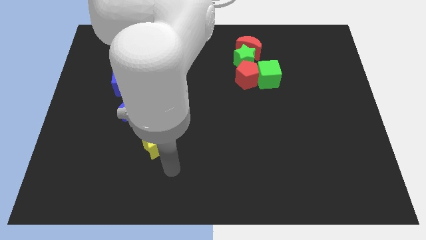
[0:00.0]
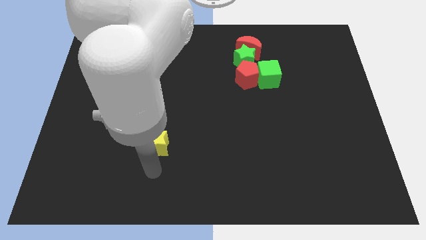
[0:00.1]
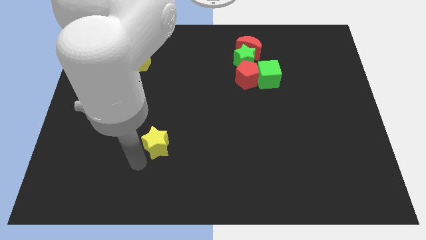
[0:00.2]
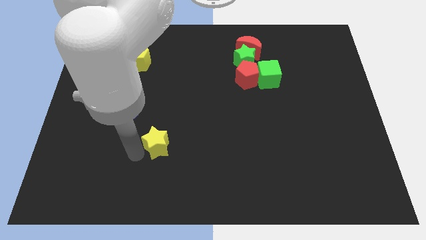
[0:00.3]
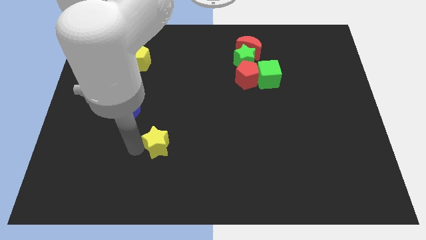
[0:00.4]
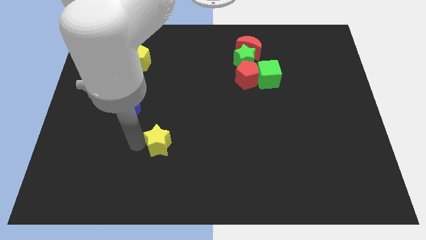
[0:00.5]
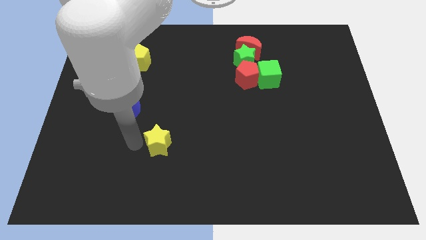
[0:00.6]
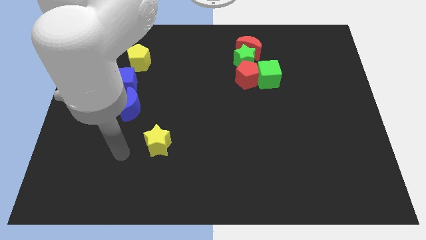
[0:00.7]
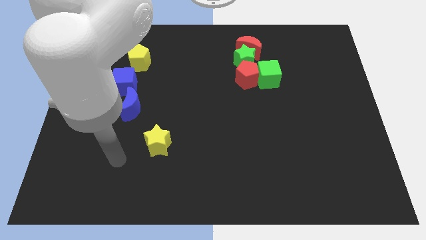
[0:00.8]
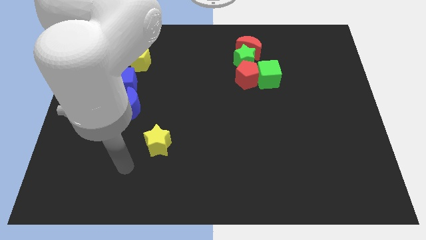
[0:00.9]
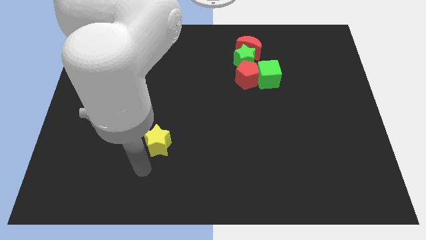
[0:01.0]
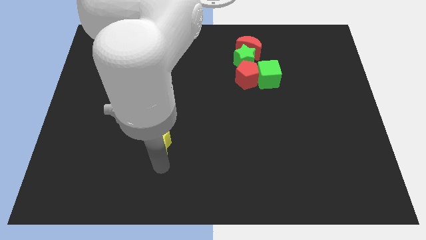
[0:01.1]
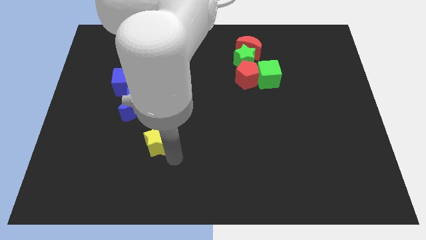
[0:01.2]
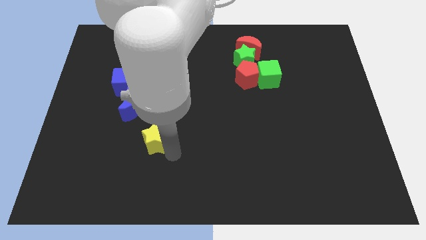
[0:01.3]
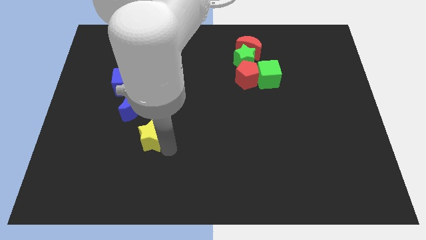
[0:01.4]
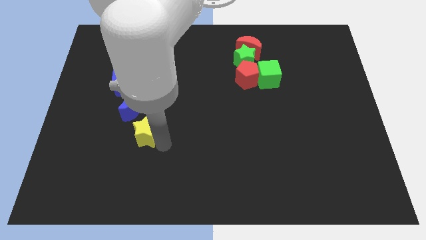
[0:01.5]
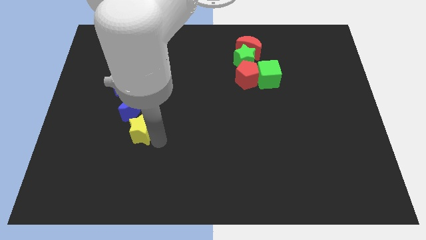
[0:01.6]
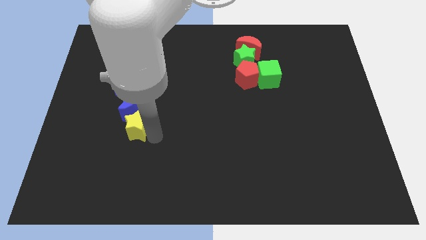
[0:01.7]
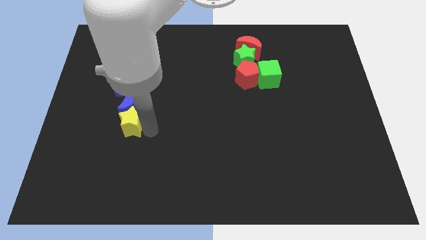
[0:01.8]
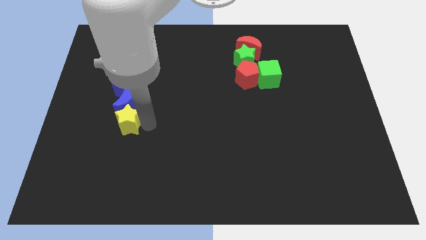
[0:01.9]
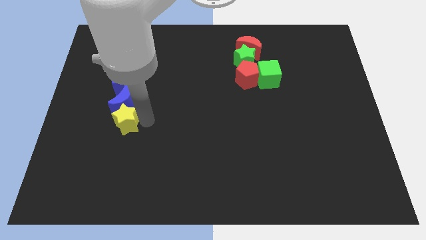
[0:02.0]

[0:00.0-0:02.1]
push yellow star into blue moon

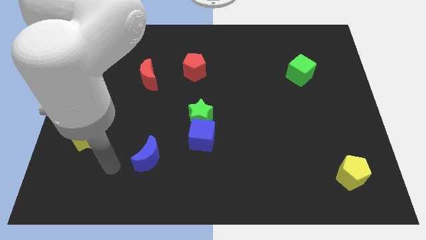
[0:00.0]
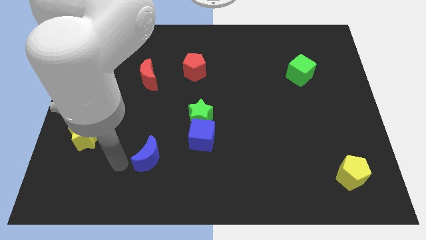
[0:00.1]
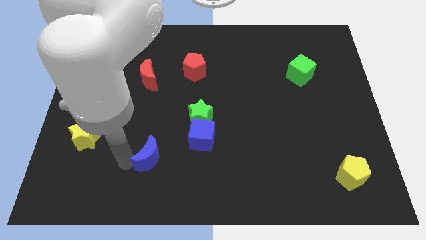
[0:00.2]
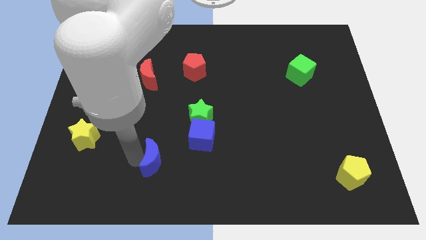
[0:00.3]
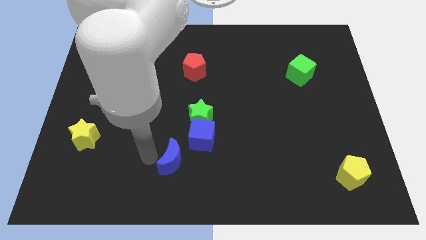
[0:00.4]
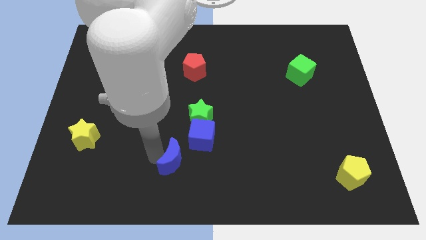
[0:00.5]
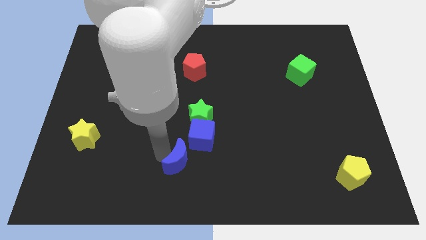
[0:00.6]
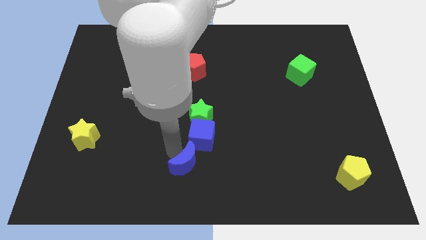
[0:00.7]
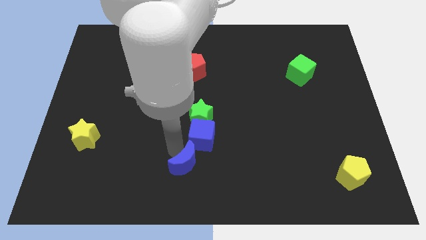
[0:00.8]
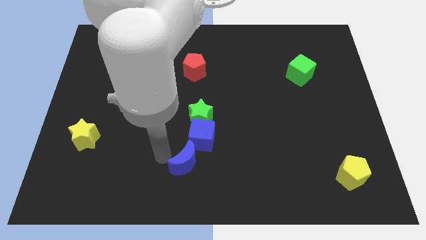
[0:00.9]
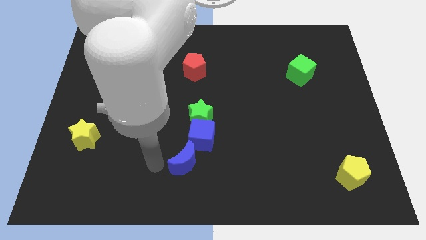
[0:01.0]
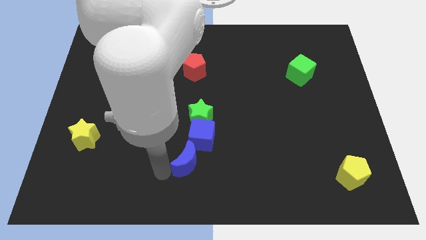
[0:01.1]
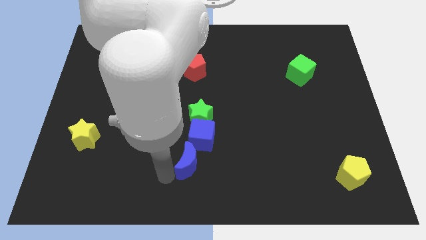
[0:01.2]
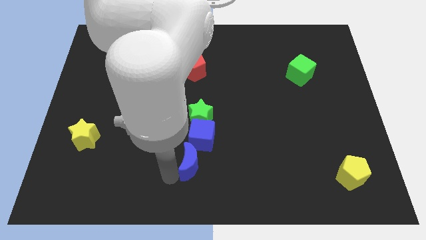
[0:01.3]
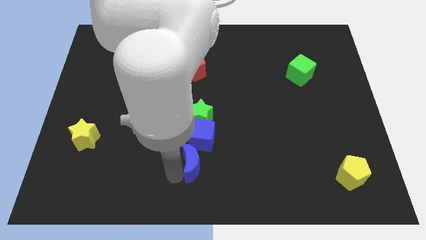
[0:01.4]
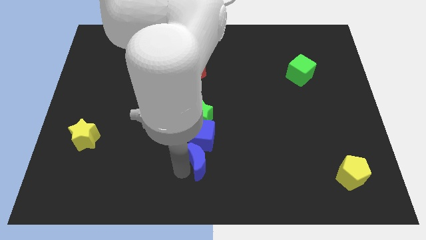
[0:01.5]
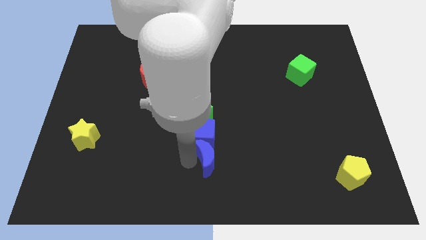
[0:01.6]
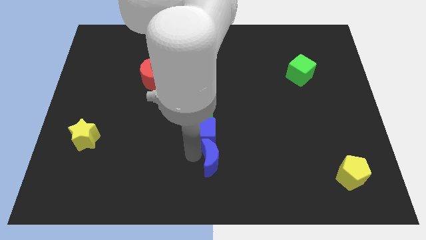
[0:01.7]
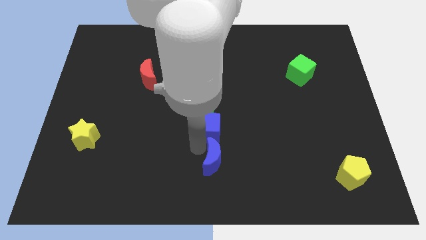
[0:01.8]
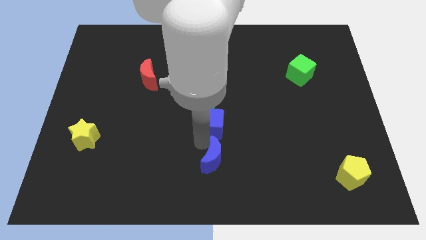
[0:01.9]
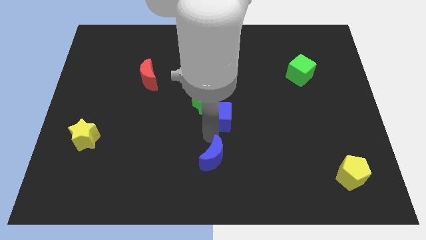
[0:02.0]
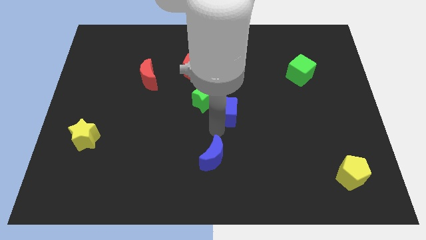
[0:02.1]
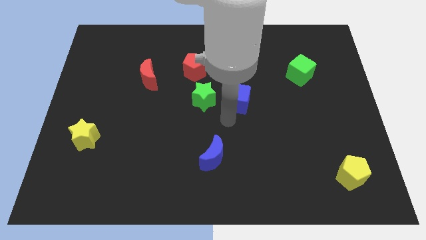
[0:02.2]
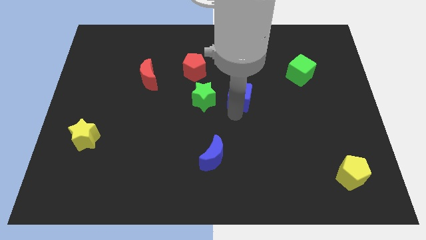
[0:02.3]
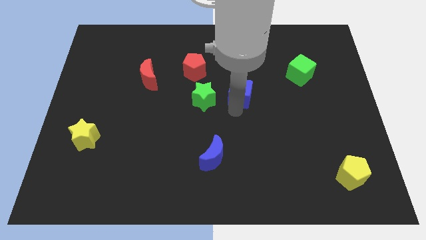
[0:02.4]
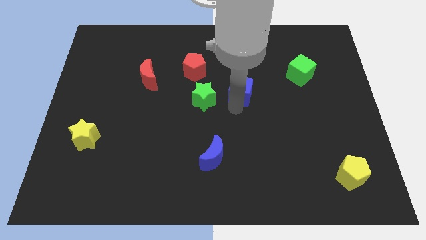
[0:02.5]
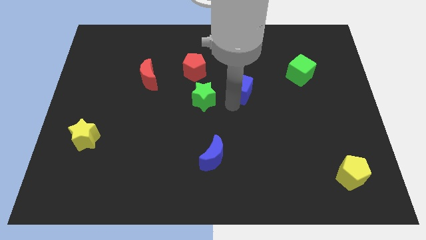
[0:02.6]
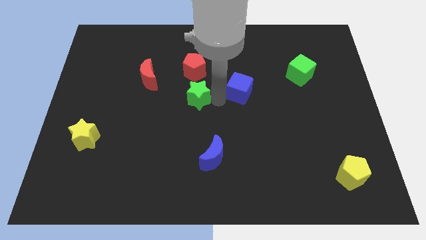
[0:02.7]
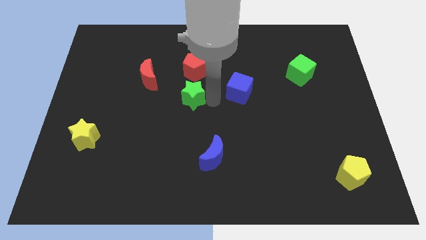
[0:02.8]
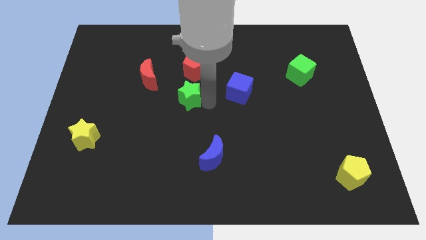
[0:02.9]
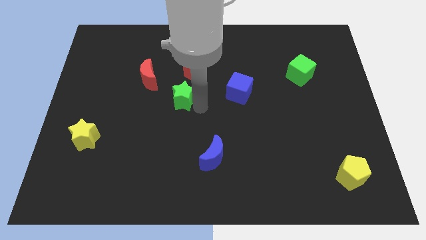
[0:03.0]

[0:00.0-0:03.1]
point your arm right to green star

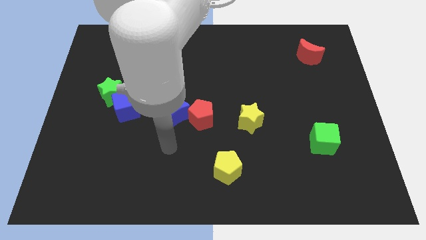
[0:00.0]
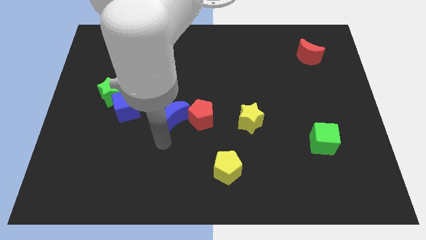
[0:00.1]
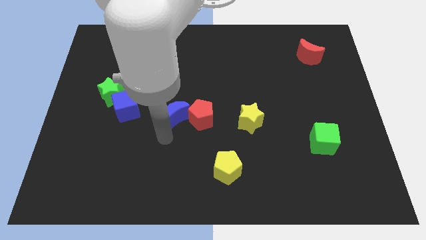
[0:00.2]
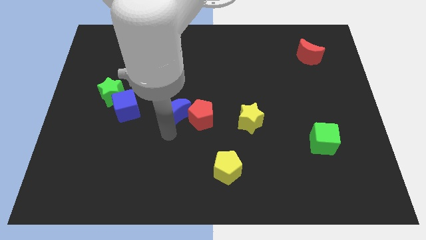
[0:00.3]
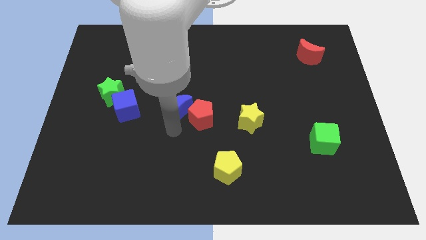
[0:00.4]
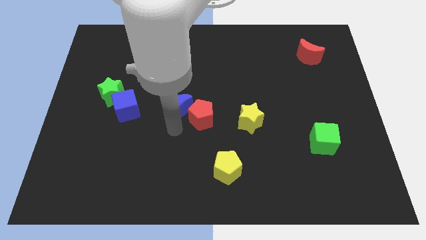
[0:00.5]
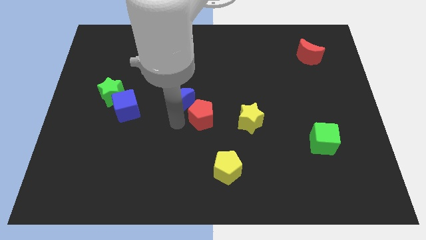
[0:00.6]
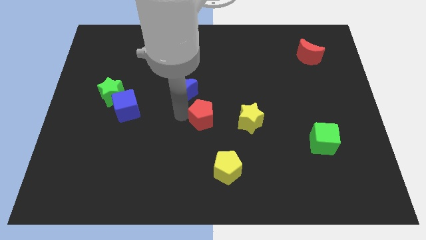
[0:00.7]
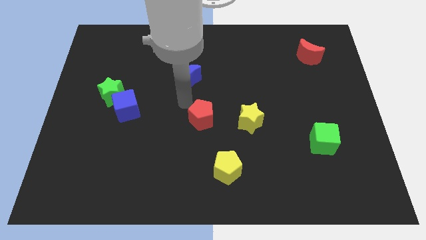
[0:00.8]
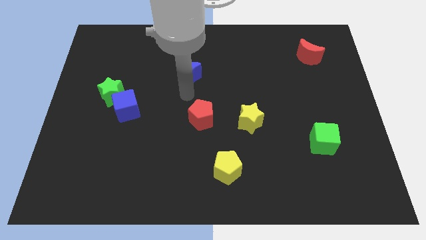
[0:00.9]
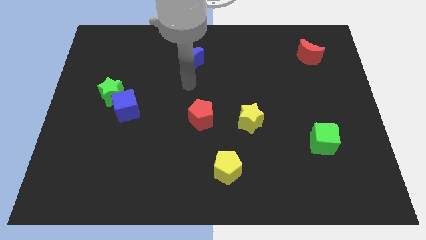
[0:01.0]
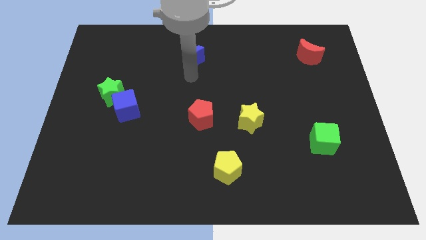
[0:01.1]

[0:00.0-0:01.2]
separate the blue crescent from the red pentagon

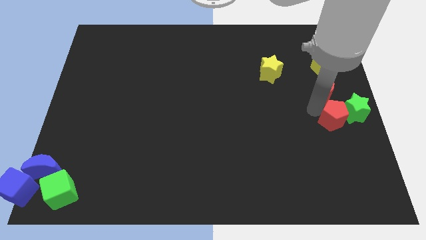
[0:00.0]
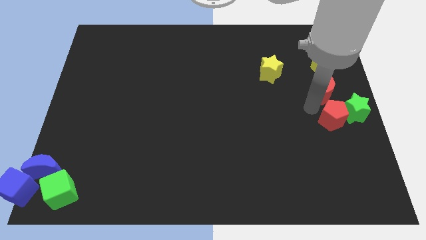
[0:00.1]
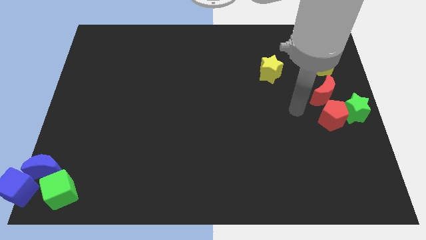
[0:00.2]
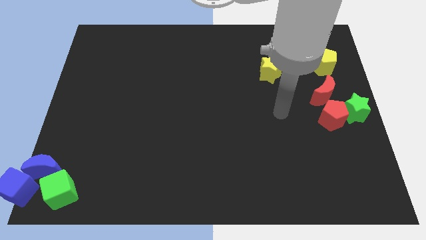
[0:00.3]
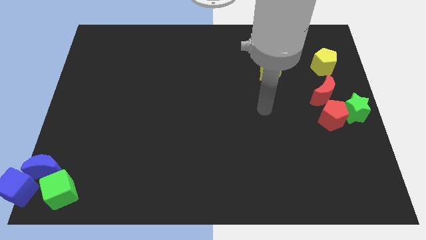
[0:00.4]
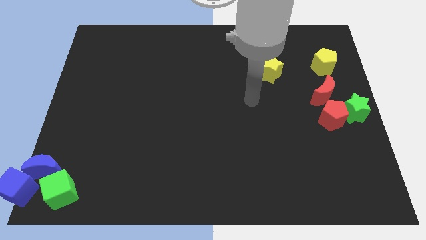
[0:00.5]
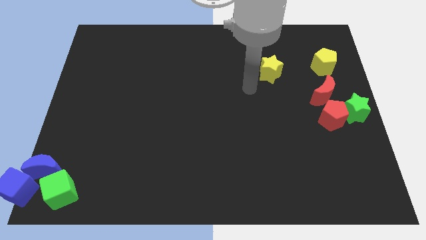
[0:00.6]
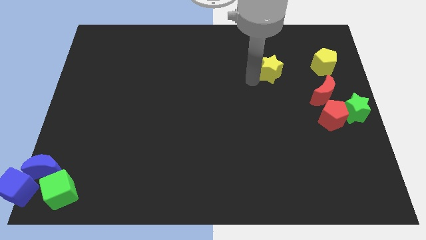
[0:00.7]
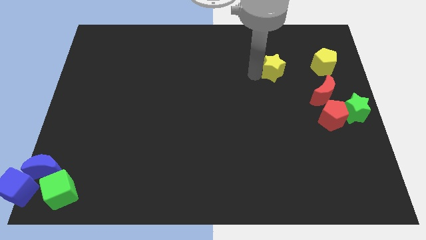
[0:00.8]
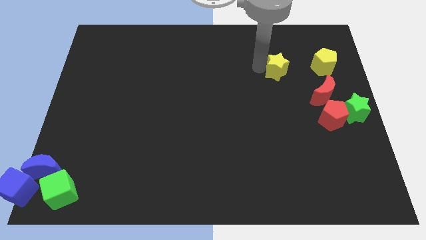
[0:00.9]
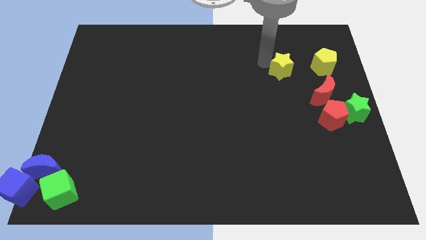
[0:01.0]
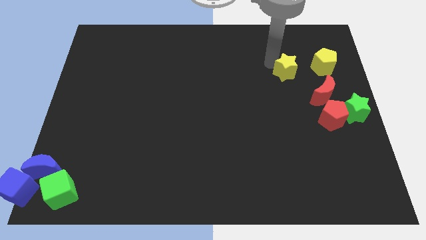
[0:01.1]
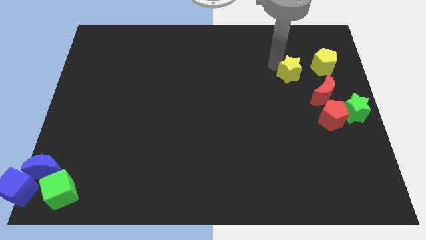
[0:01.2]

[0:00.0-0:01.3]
make an atriangle by placing yellow star

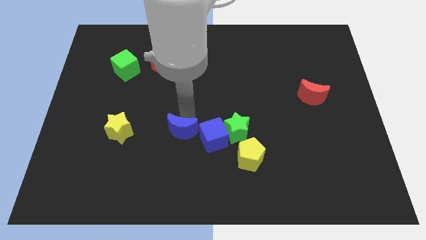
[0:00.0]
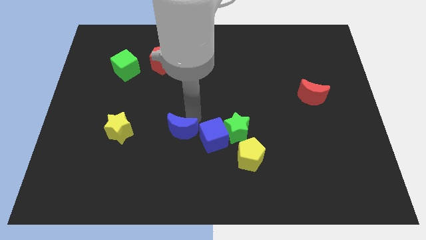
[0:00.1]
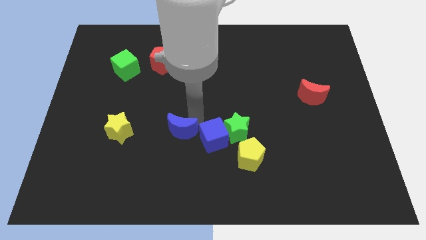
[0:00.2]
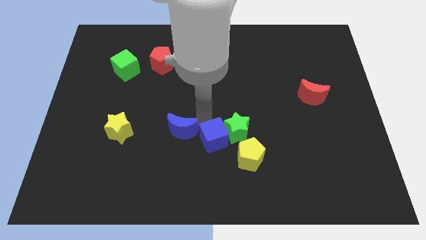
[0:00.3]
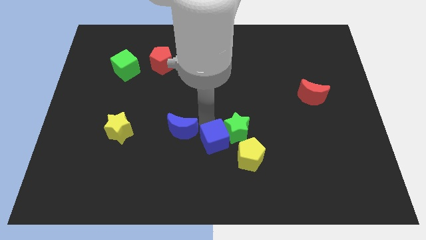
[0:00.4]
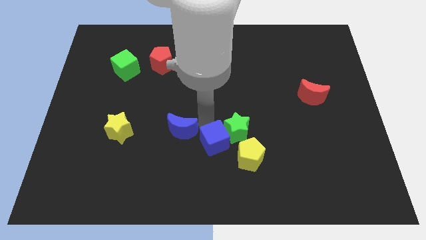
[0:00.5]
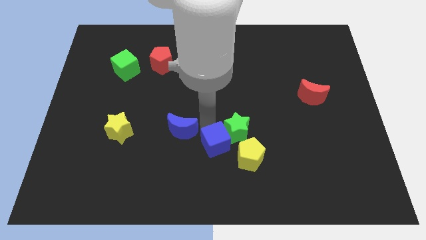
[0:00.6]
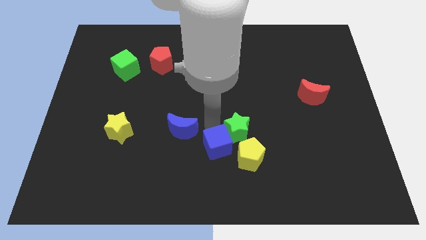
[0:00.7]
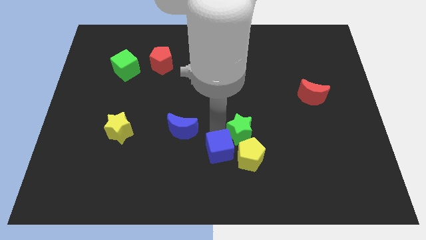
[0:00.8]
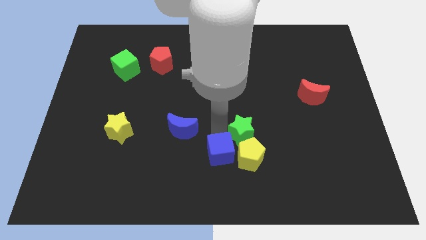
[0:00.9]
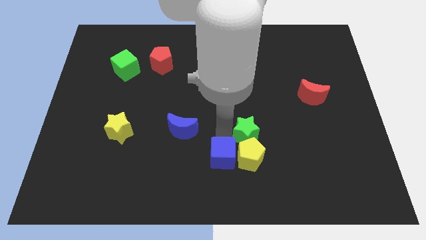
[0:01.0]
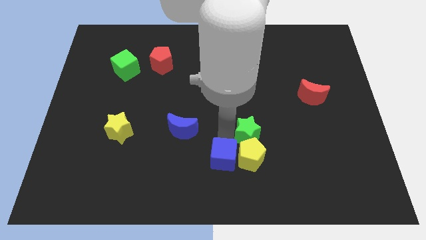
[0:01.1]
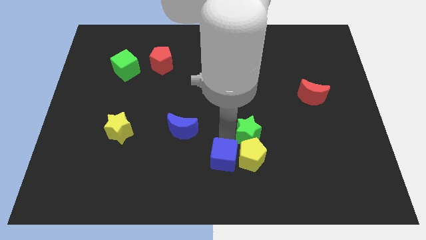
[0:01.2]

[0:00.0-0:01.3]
push the blue cube to the left of the yellow pentagon

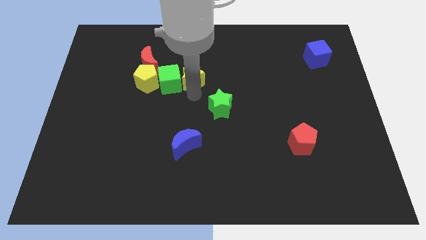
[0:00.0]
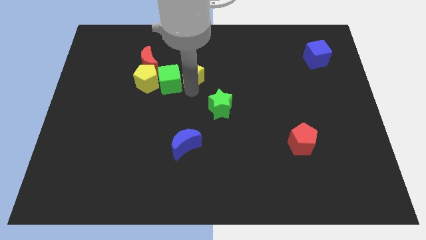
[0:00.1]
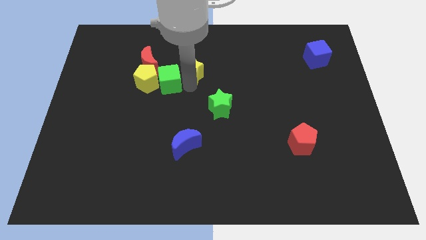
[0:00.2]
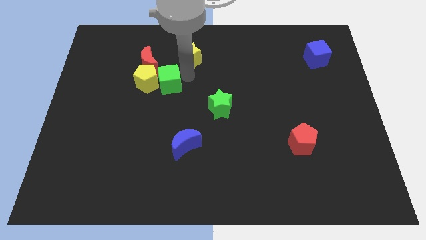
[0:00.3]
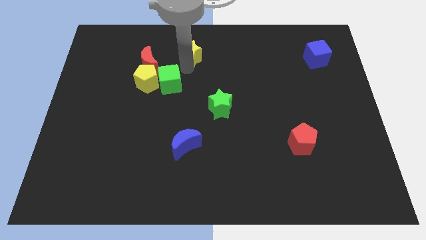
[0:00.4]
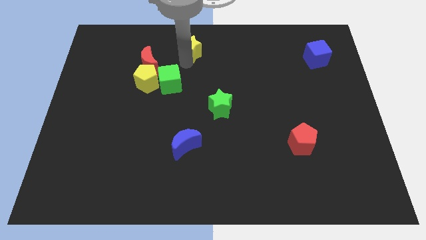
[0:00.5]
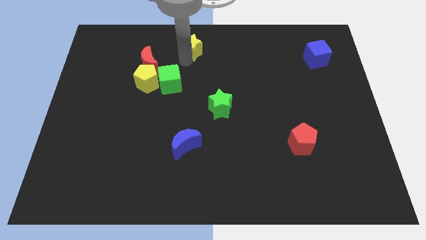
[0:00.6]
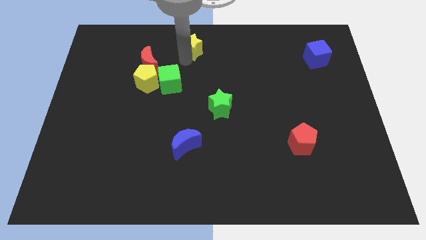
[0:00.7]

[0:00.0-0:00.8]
separate the green cube and yellow star
